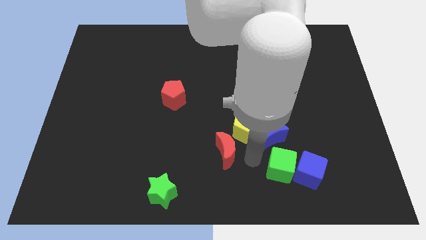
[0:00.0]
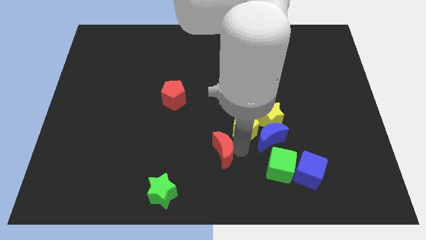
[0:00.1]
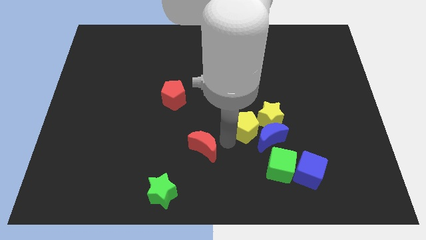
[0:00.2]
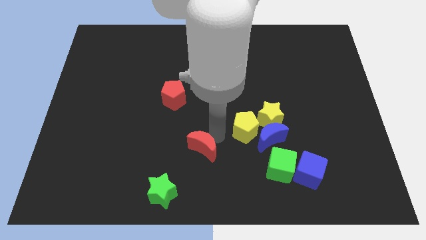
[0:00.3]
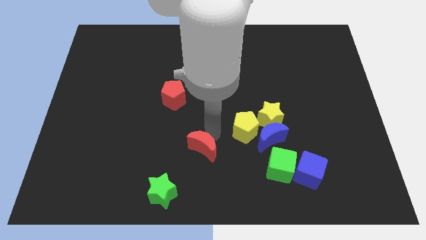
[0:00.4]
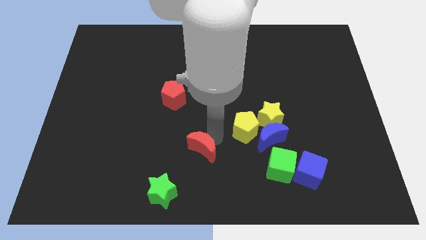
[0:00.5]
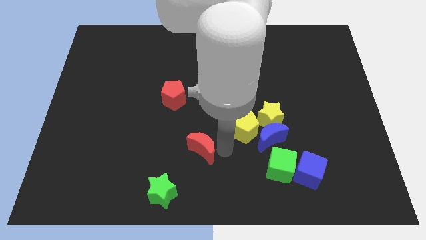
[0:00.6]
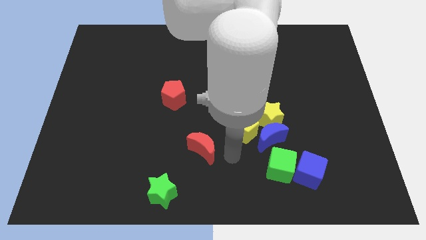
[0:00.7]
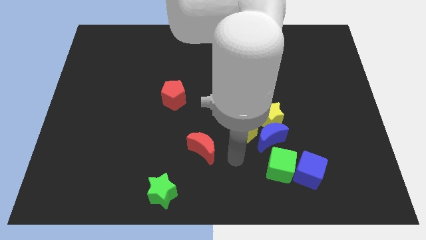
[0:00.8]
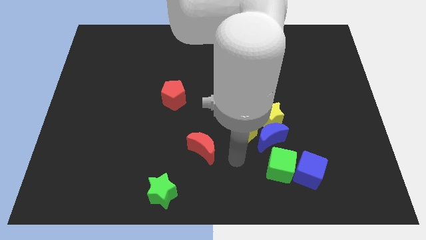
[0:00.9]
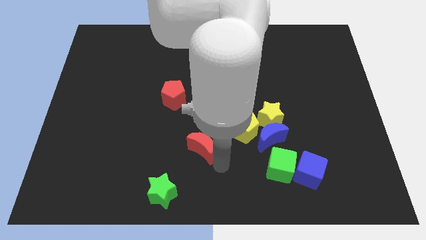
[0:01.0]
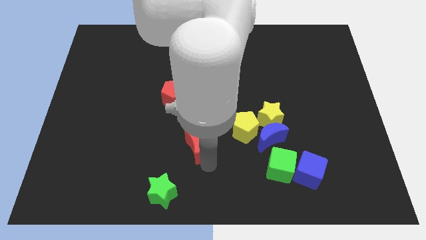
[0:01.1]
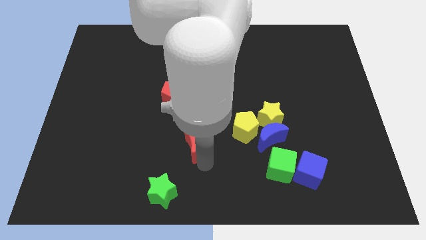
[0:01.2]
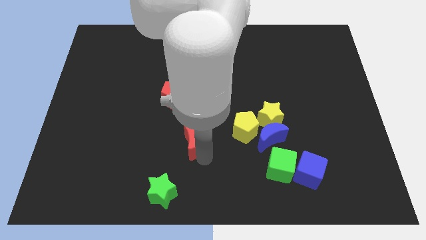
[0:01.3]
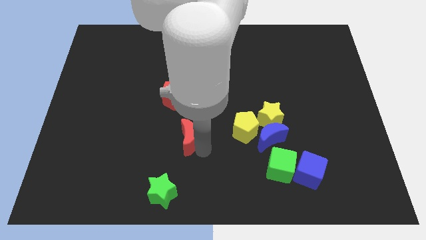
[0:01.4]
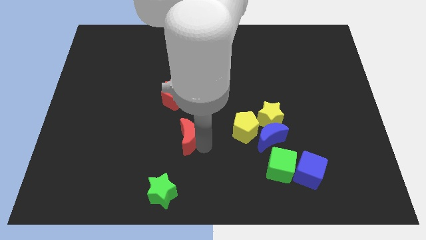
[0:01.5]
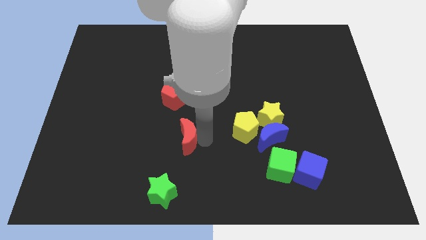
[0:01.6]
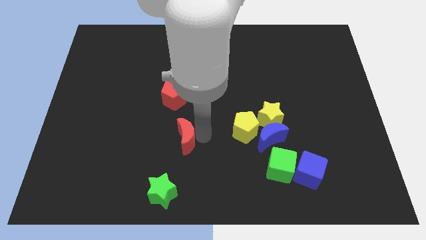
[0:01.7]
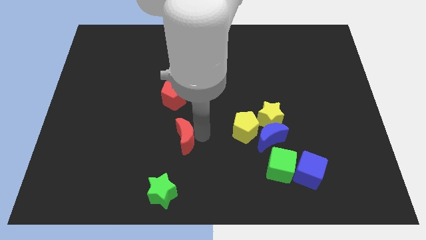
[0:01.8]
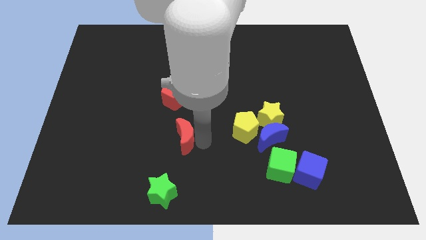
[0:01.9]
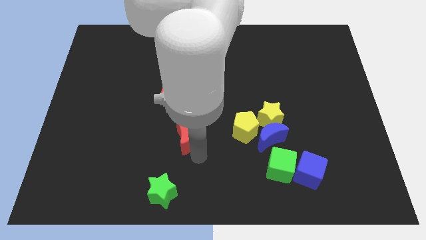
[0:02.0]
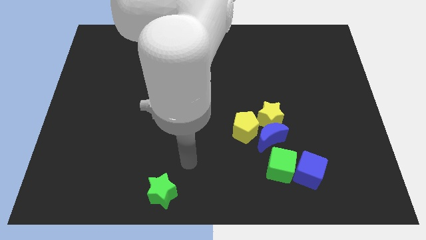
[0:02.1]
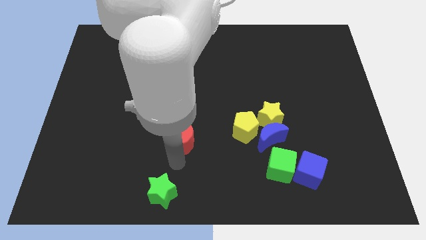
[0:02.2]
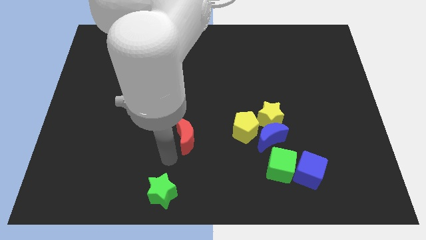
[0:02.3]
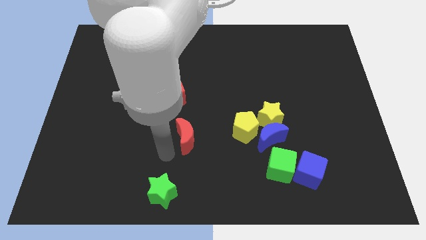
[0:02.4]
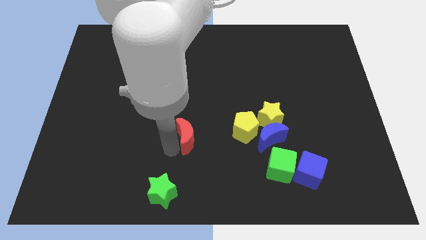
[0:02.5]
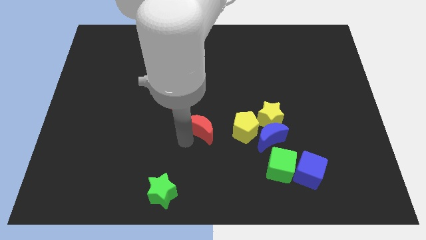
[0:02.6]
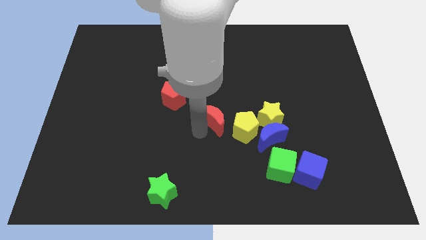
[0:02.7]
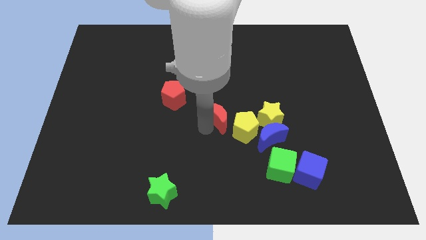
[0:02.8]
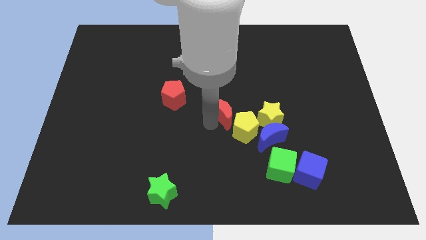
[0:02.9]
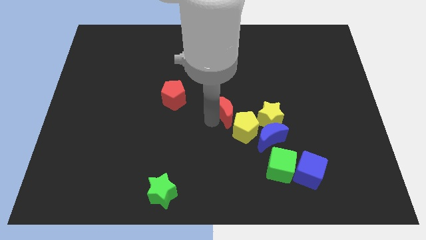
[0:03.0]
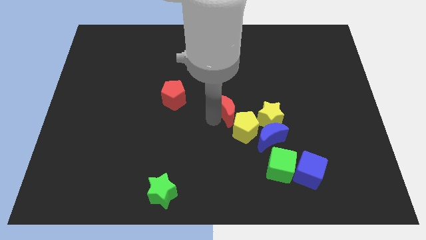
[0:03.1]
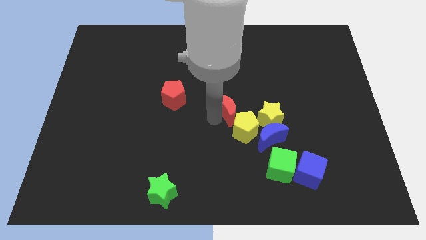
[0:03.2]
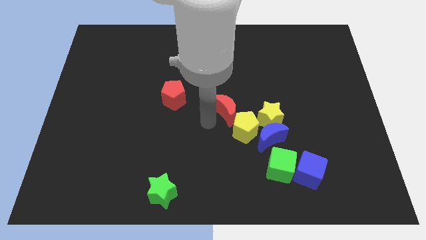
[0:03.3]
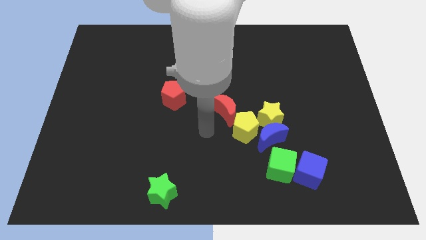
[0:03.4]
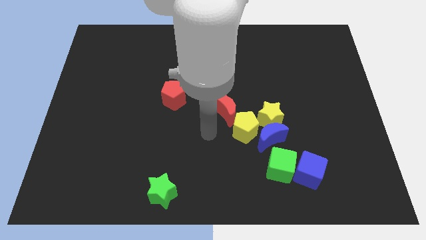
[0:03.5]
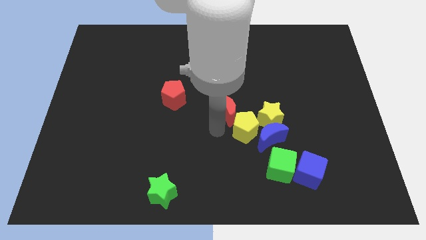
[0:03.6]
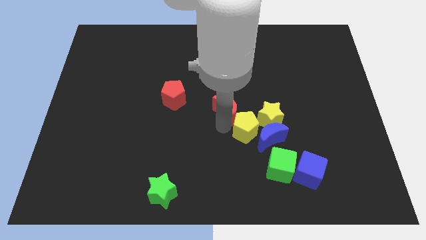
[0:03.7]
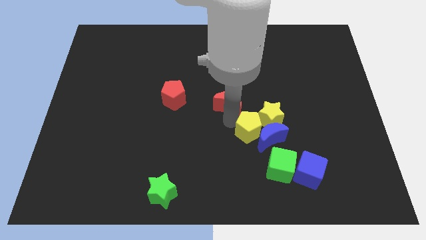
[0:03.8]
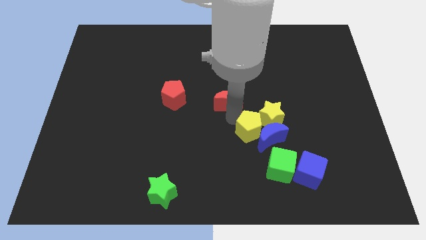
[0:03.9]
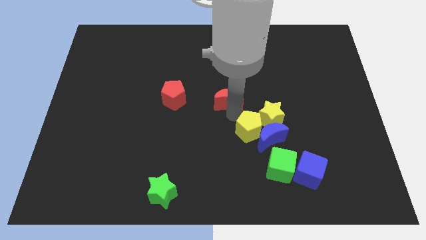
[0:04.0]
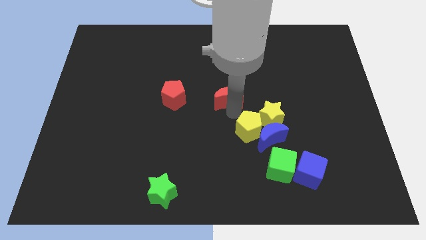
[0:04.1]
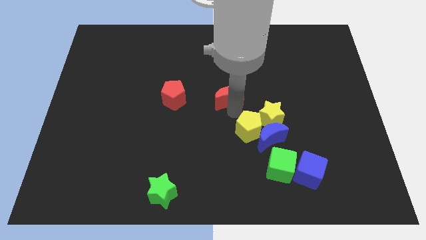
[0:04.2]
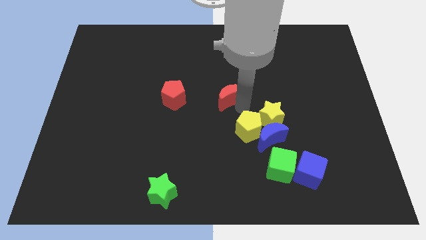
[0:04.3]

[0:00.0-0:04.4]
put the red moon diagonally top left to the yellow pentagon

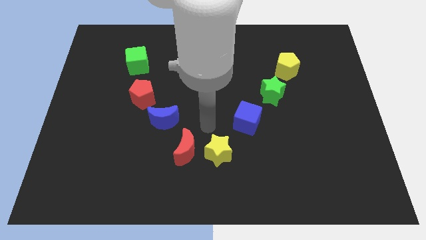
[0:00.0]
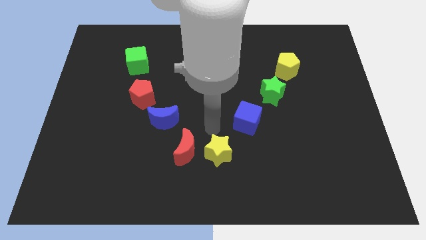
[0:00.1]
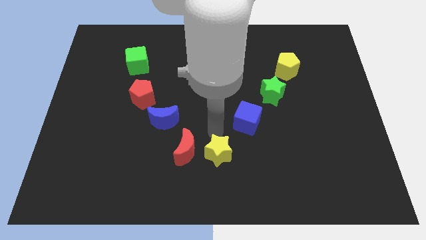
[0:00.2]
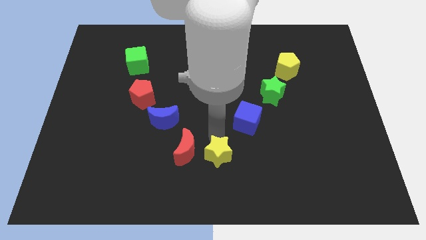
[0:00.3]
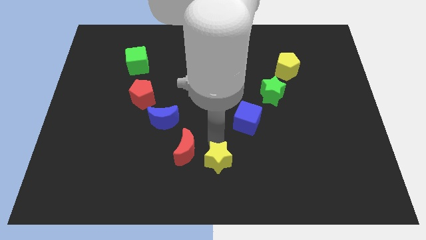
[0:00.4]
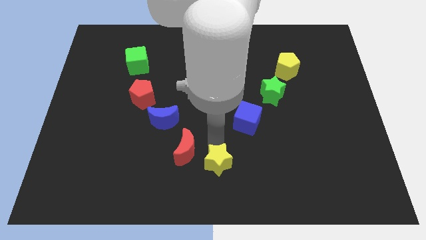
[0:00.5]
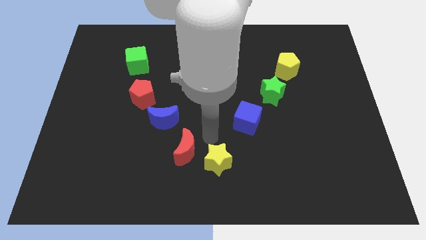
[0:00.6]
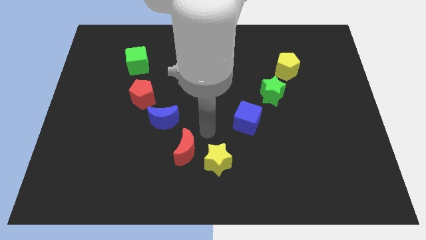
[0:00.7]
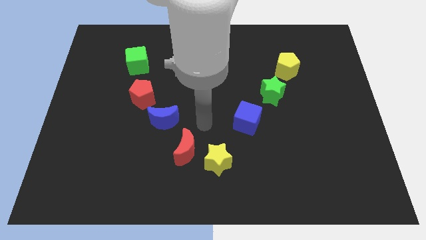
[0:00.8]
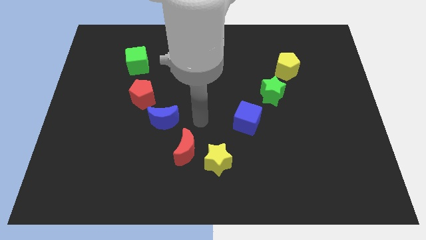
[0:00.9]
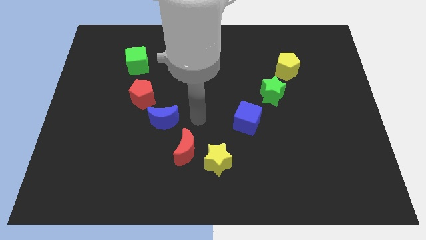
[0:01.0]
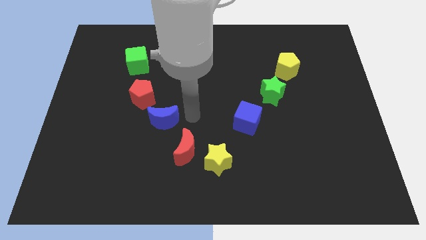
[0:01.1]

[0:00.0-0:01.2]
slide the yellow star slightly to the bottom side of the board

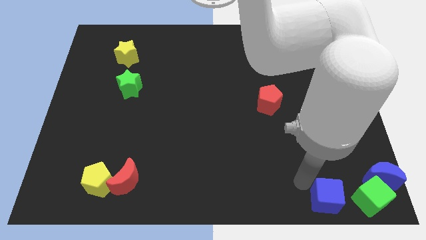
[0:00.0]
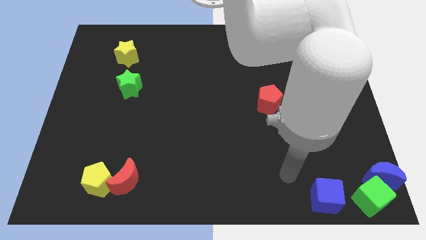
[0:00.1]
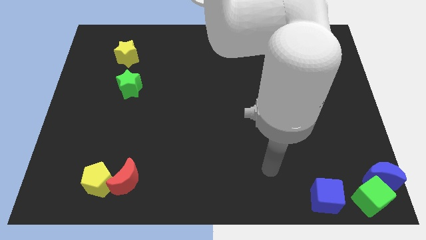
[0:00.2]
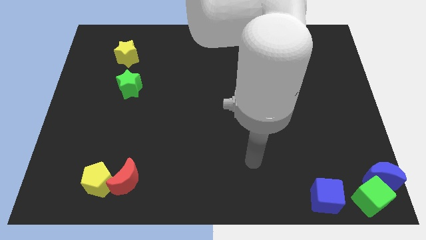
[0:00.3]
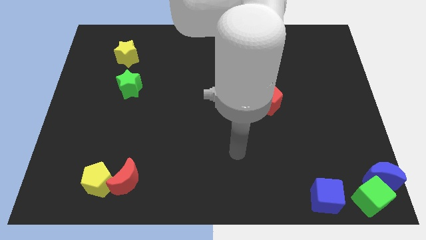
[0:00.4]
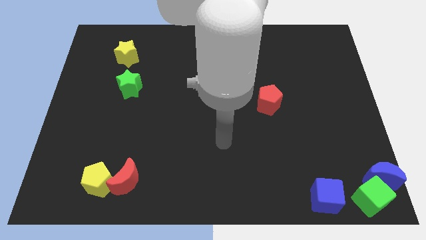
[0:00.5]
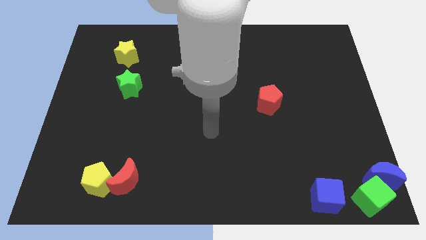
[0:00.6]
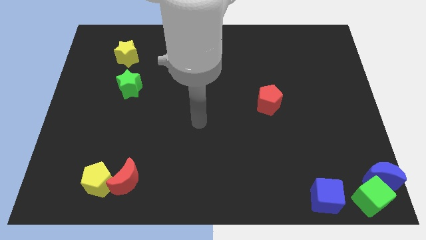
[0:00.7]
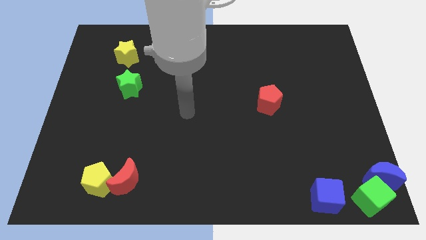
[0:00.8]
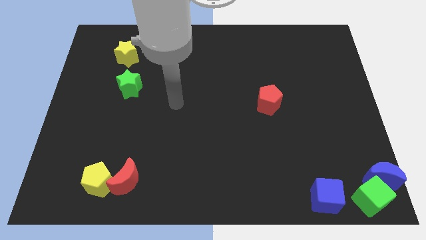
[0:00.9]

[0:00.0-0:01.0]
move your arm away from green cube

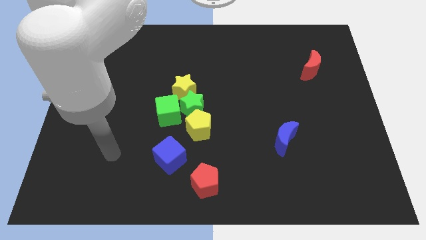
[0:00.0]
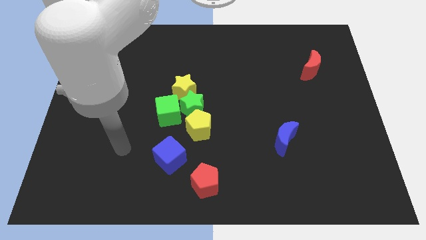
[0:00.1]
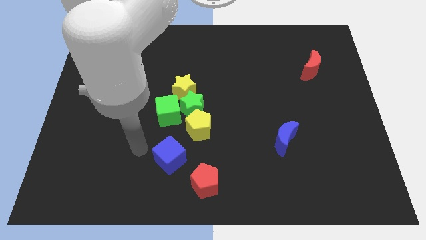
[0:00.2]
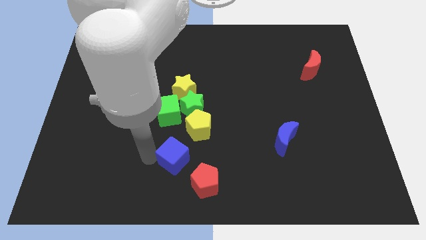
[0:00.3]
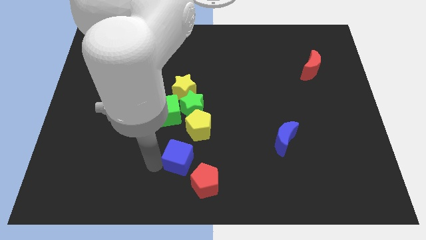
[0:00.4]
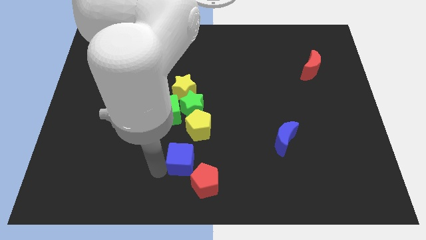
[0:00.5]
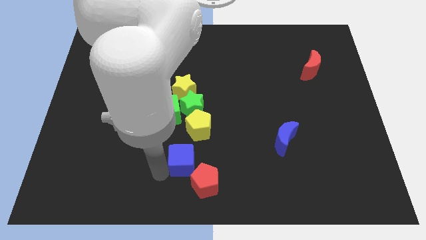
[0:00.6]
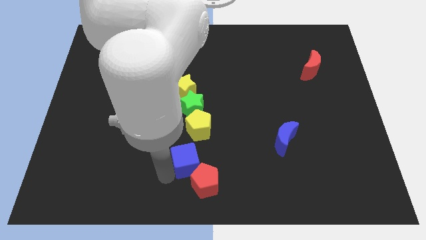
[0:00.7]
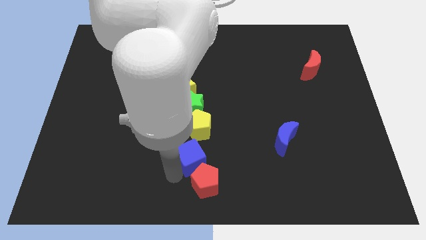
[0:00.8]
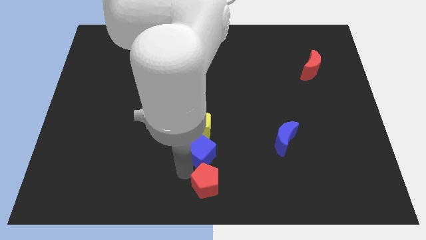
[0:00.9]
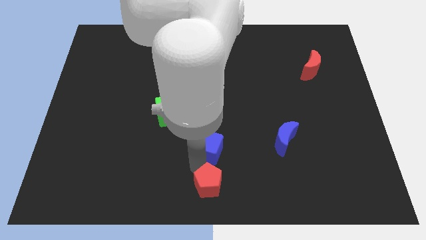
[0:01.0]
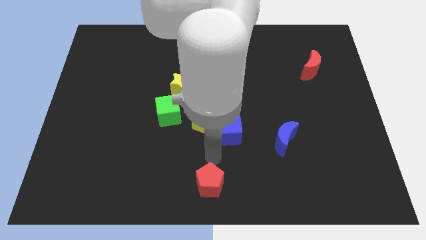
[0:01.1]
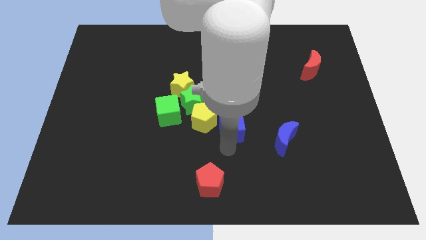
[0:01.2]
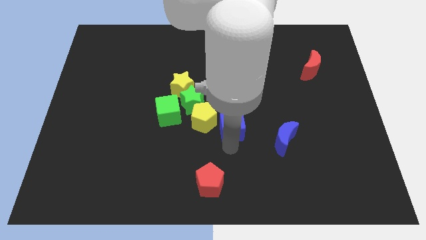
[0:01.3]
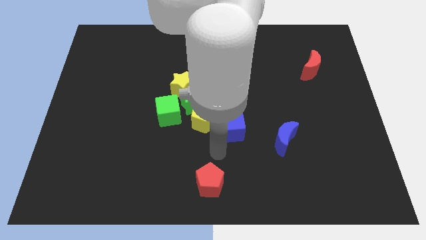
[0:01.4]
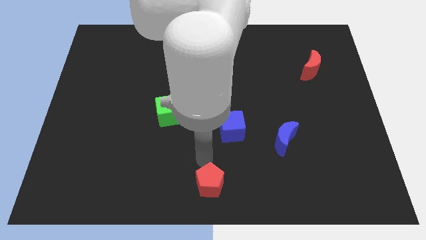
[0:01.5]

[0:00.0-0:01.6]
push the blue cube to the diagonal bottom right of the yellow pentagon

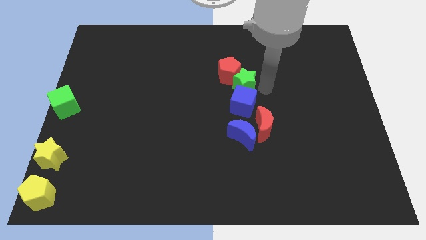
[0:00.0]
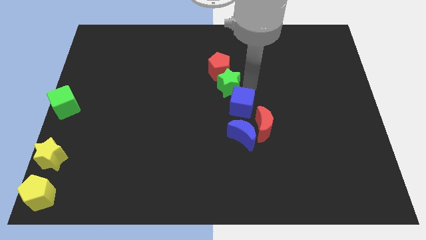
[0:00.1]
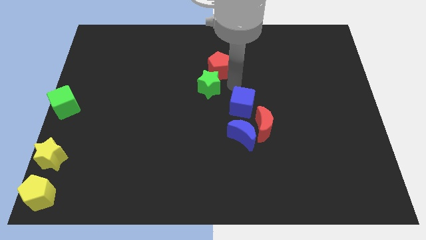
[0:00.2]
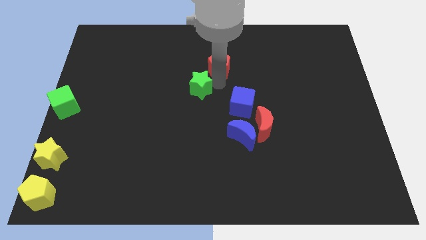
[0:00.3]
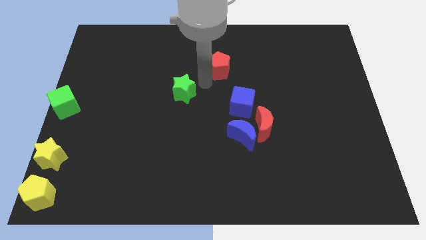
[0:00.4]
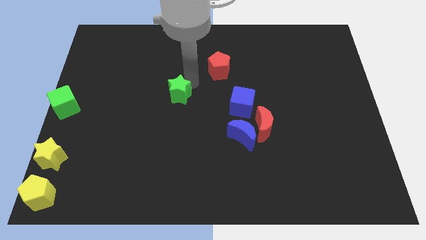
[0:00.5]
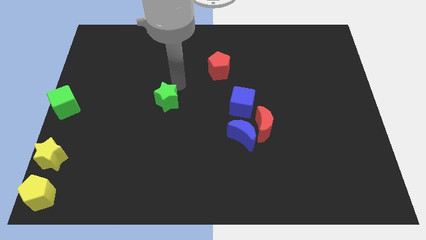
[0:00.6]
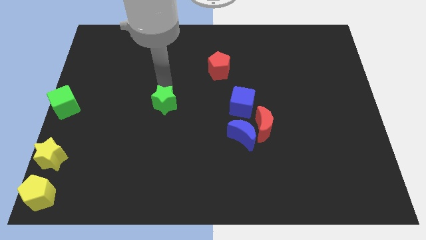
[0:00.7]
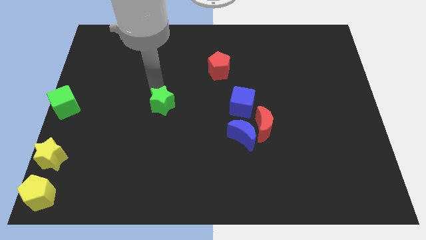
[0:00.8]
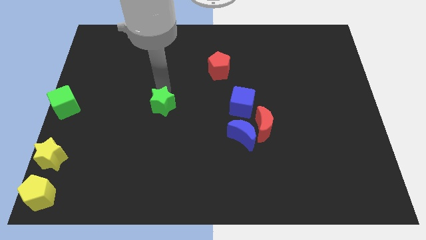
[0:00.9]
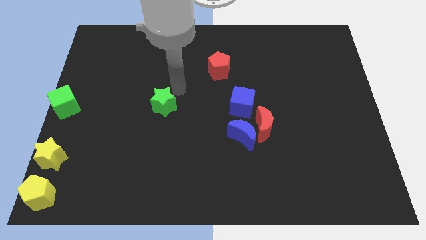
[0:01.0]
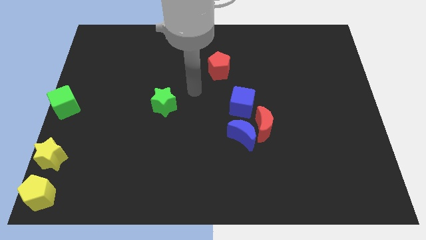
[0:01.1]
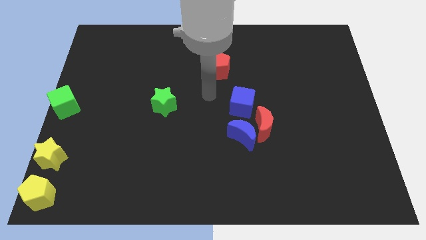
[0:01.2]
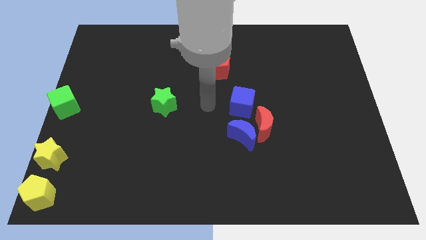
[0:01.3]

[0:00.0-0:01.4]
drag the green star to the left side of the green cube
